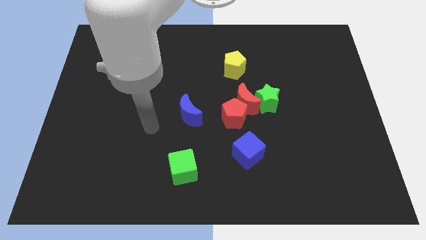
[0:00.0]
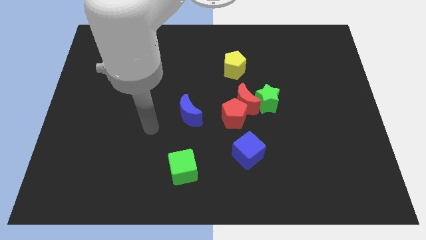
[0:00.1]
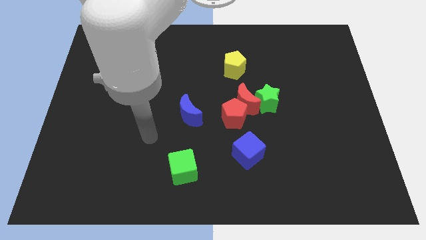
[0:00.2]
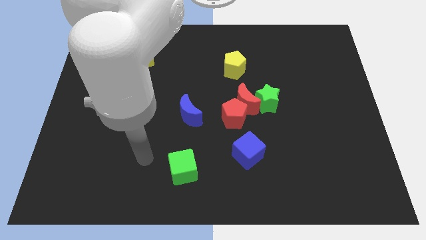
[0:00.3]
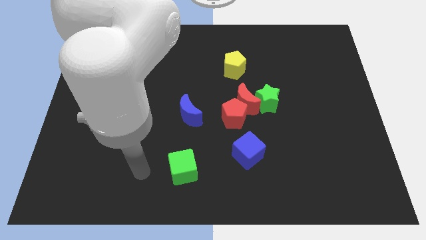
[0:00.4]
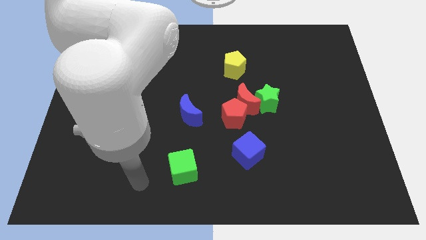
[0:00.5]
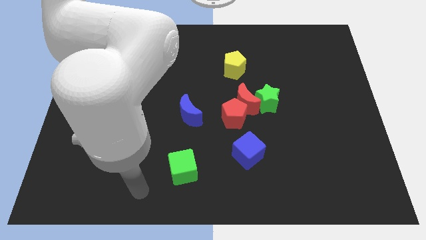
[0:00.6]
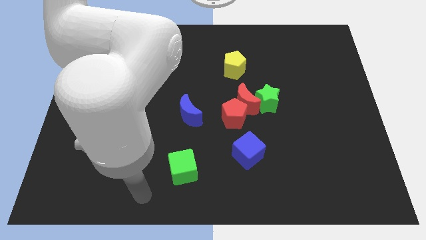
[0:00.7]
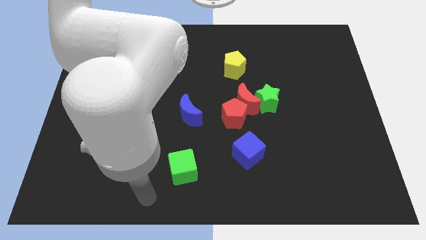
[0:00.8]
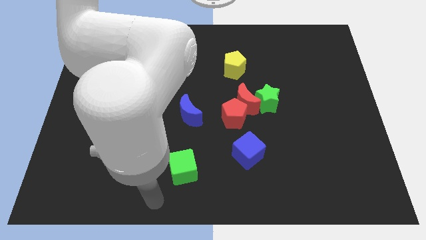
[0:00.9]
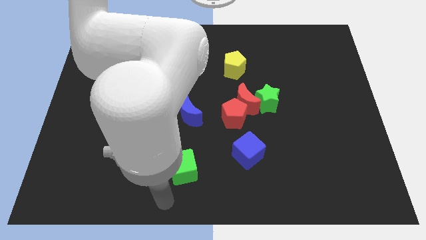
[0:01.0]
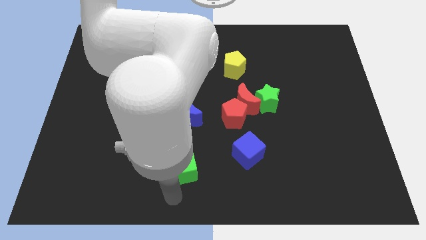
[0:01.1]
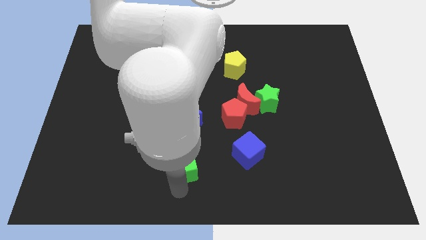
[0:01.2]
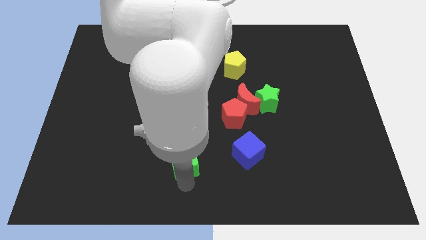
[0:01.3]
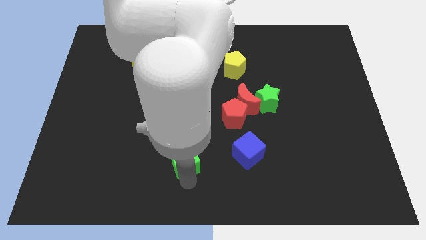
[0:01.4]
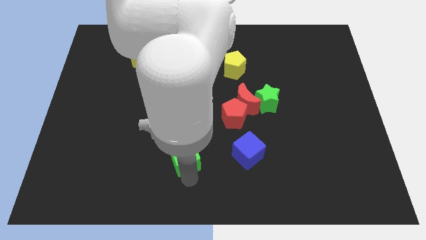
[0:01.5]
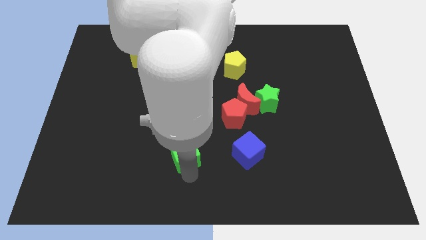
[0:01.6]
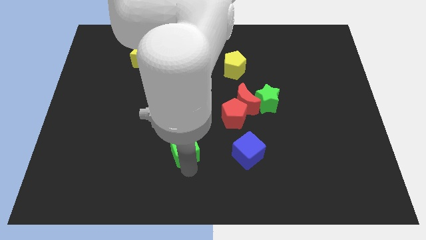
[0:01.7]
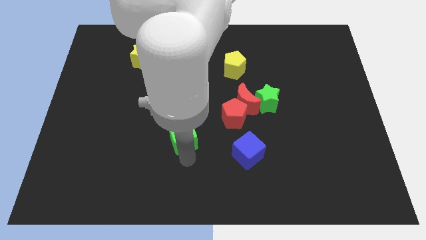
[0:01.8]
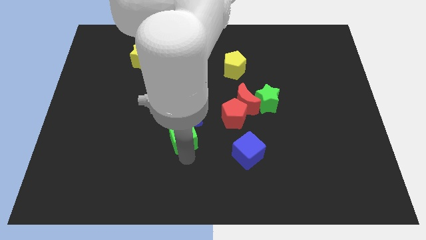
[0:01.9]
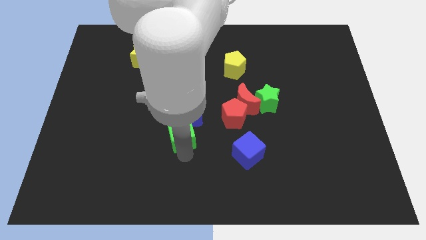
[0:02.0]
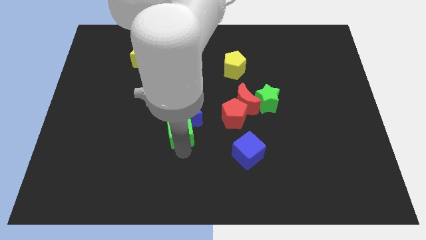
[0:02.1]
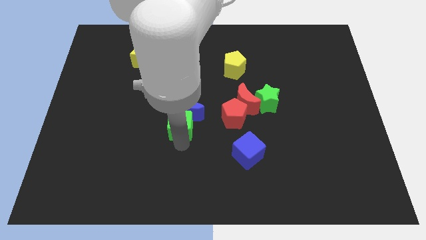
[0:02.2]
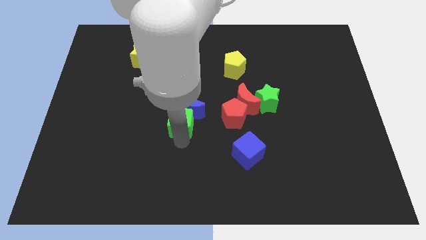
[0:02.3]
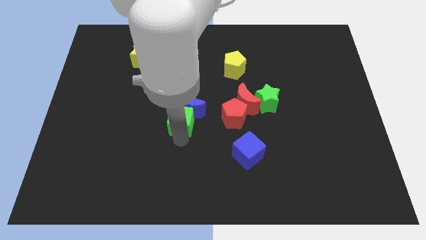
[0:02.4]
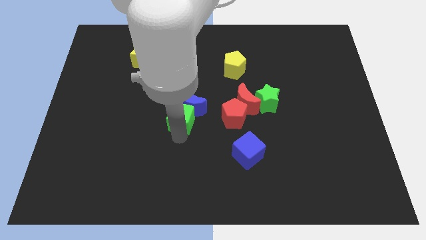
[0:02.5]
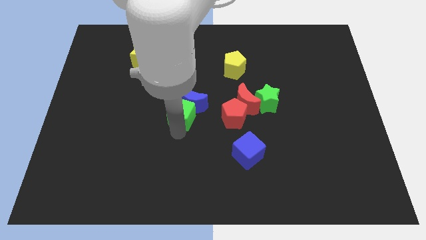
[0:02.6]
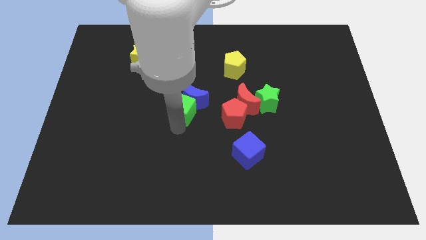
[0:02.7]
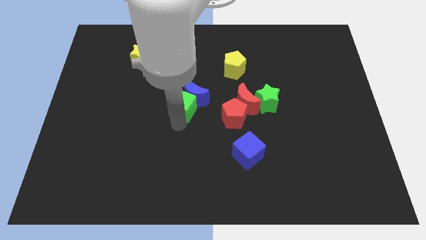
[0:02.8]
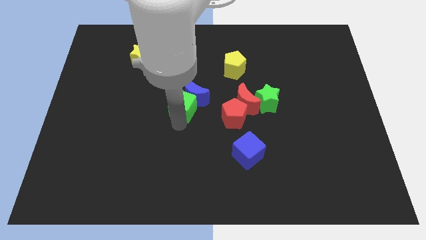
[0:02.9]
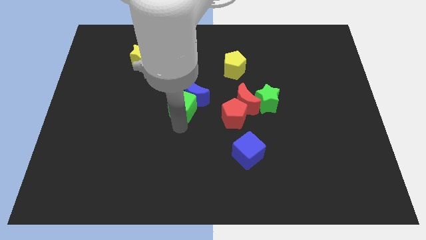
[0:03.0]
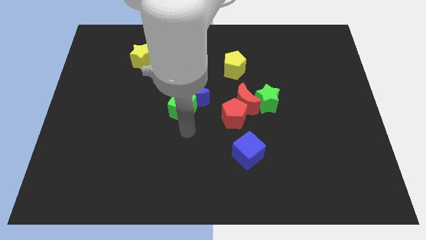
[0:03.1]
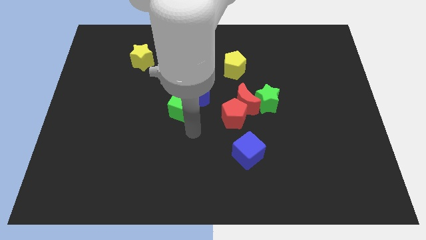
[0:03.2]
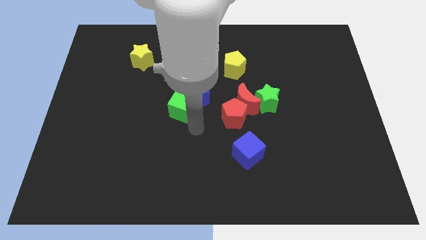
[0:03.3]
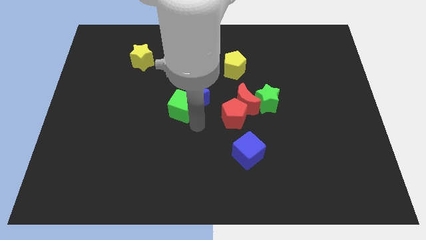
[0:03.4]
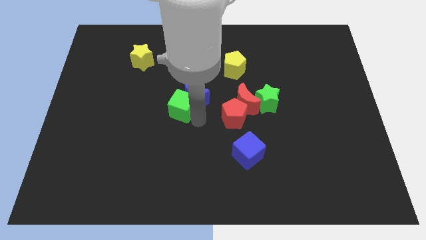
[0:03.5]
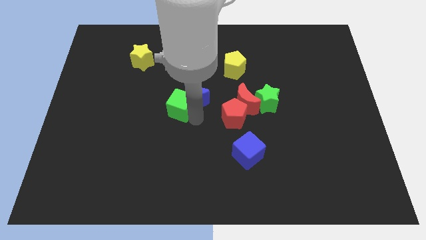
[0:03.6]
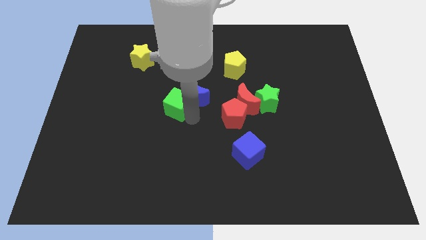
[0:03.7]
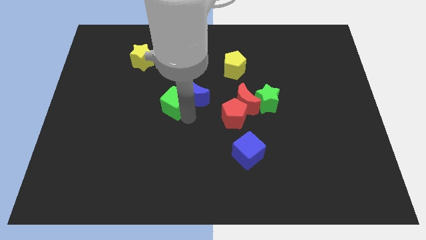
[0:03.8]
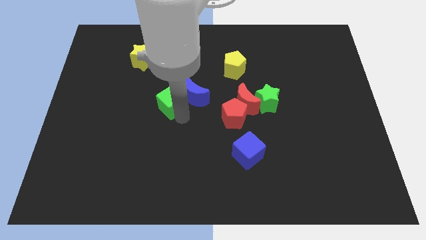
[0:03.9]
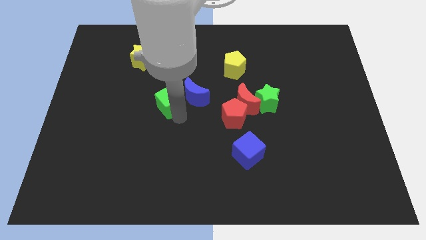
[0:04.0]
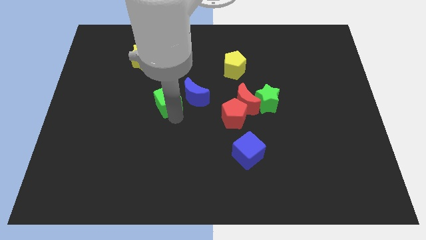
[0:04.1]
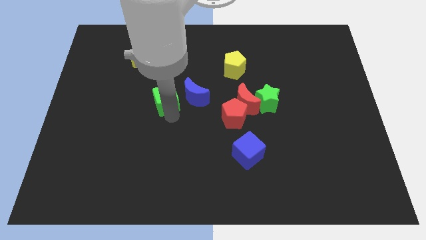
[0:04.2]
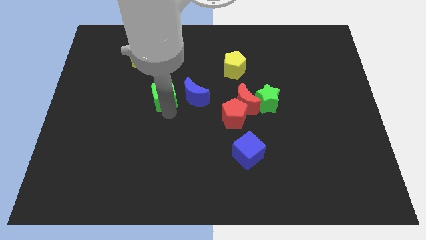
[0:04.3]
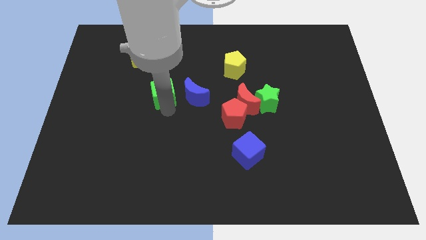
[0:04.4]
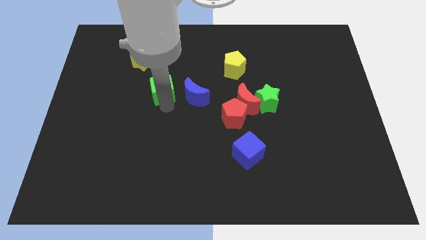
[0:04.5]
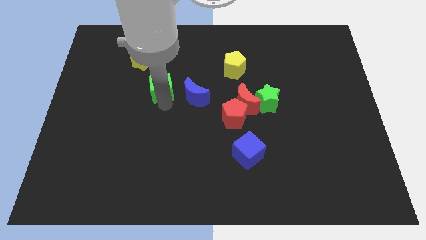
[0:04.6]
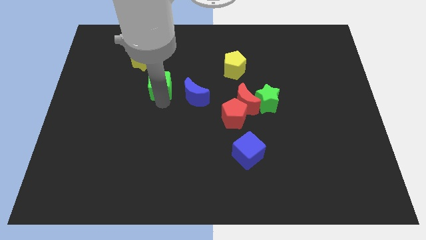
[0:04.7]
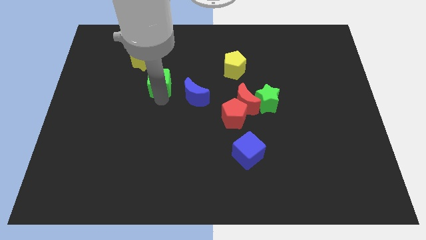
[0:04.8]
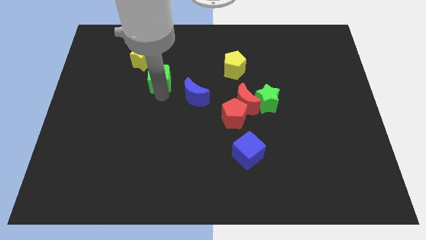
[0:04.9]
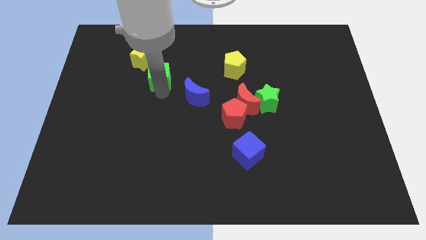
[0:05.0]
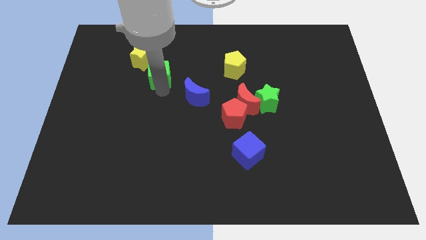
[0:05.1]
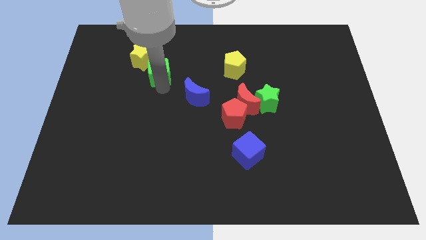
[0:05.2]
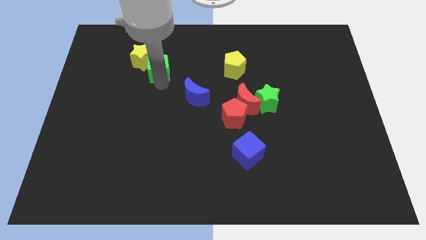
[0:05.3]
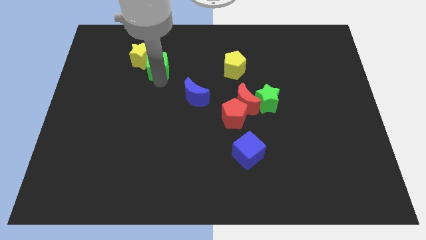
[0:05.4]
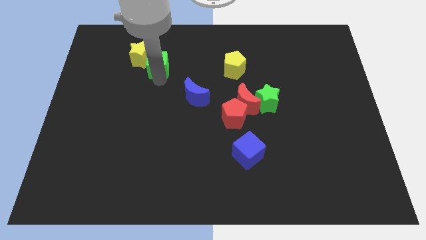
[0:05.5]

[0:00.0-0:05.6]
move the green cube towards the yellow star

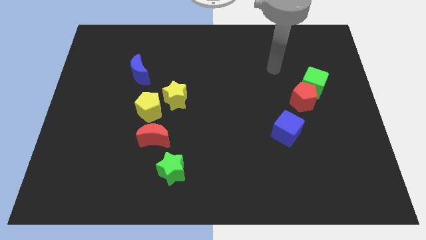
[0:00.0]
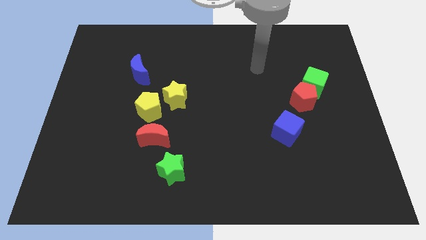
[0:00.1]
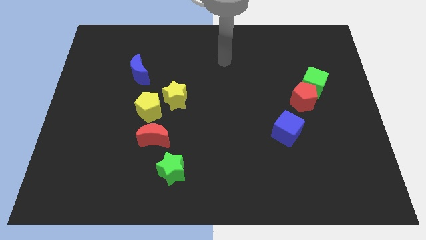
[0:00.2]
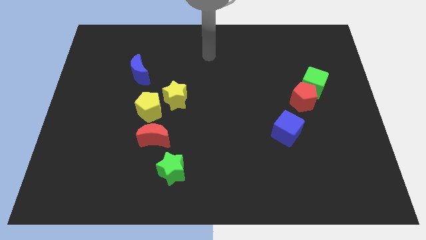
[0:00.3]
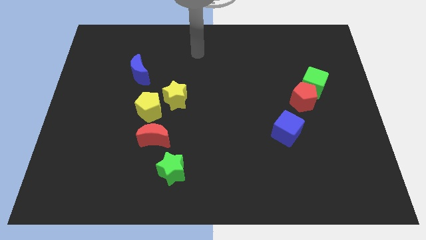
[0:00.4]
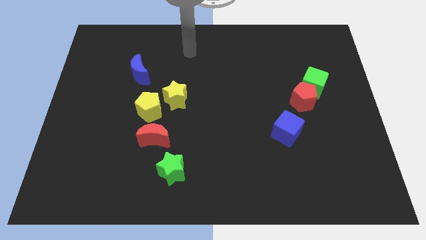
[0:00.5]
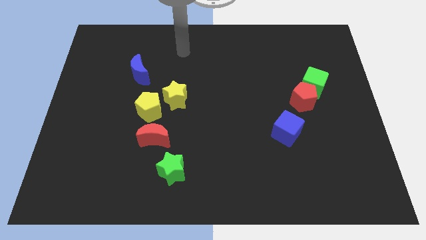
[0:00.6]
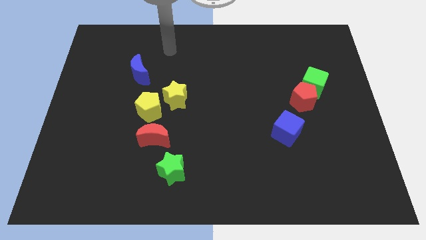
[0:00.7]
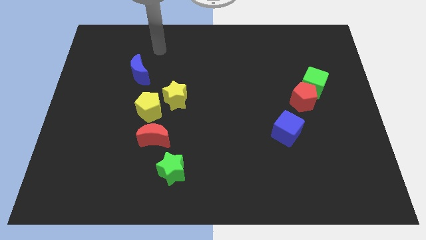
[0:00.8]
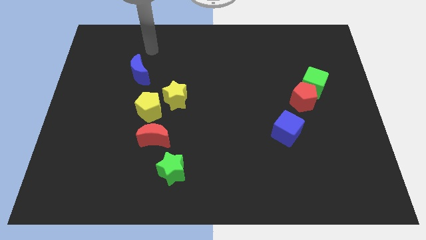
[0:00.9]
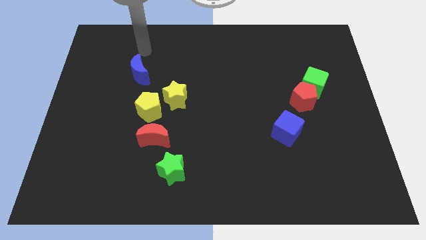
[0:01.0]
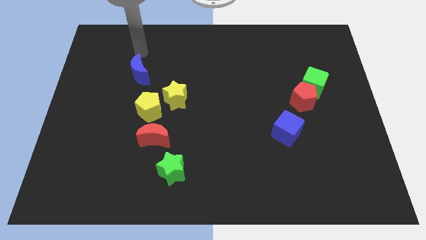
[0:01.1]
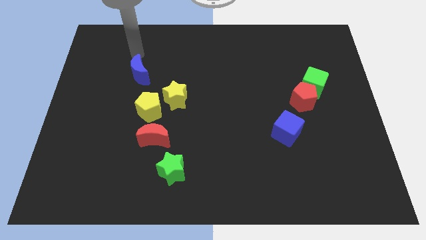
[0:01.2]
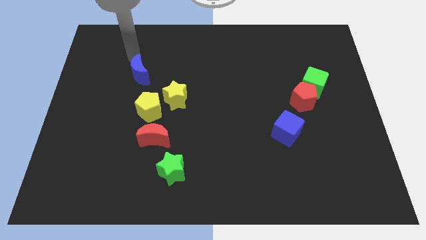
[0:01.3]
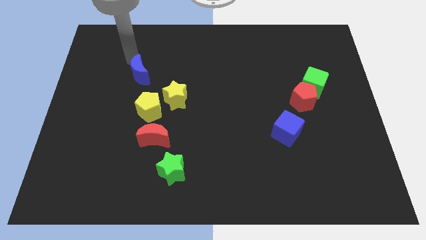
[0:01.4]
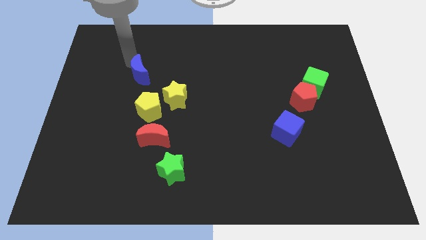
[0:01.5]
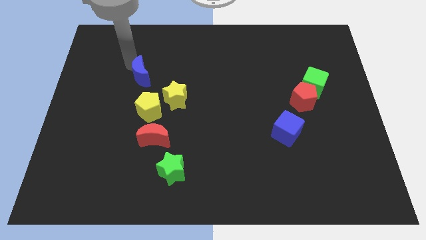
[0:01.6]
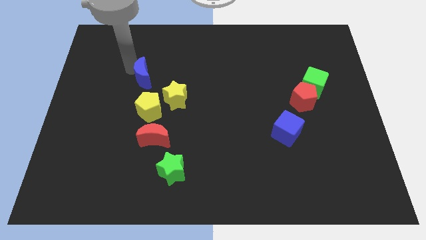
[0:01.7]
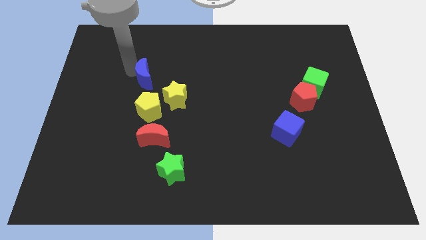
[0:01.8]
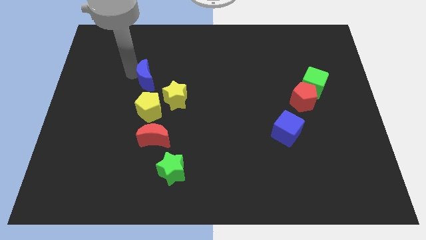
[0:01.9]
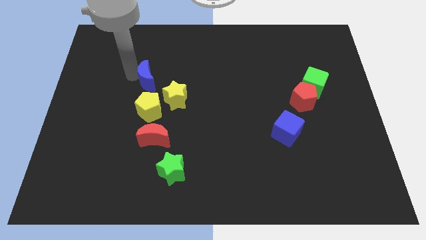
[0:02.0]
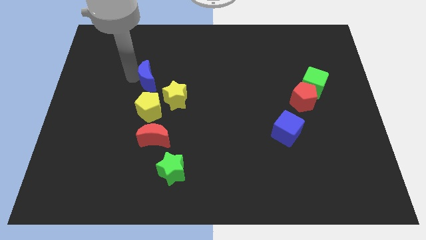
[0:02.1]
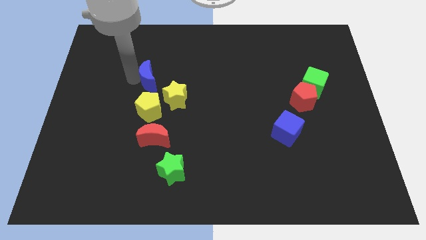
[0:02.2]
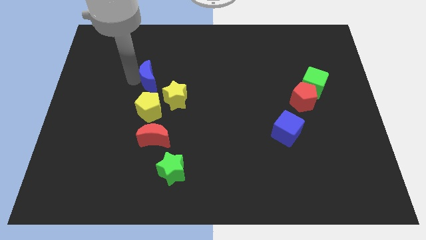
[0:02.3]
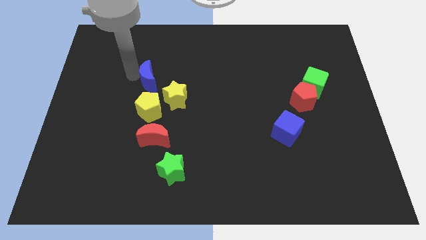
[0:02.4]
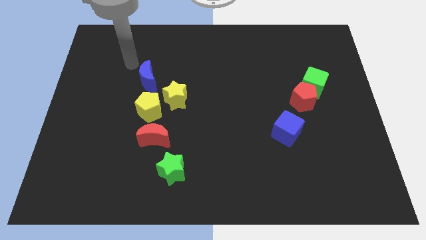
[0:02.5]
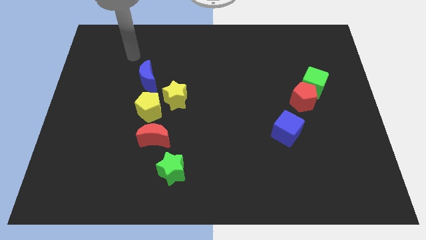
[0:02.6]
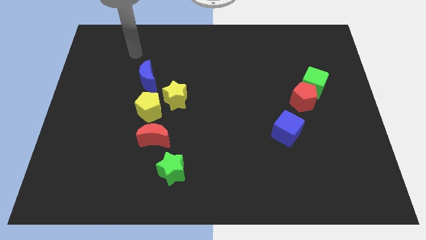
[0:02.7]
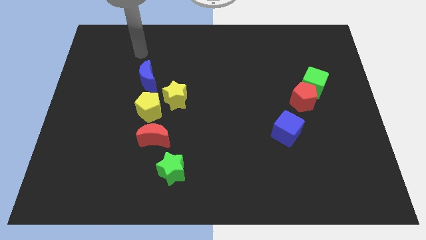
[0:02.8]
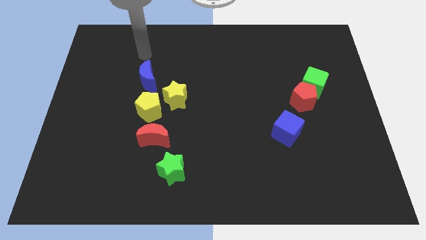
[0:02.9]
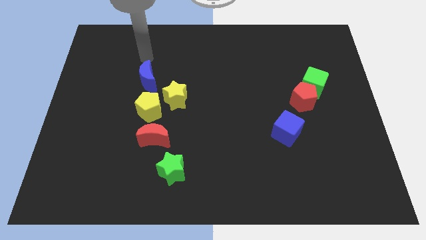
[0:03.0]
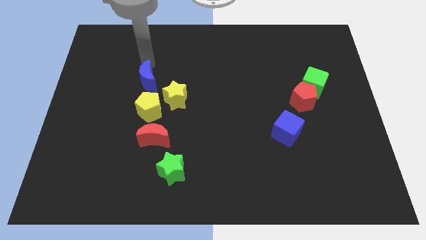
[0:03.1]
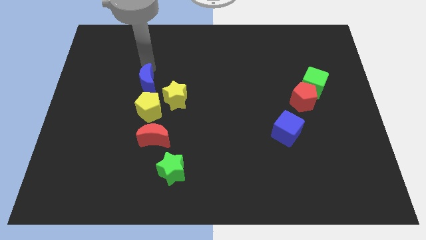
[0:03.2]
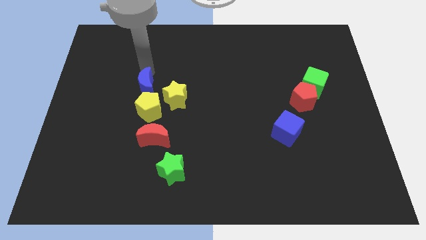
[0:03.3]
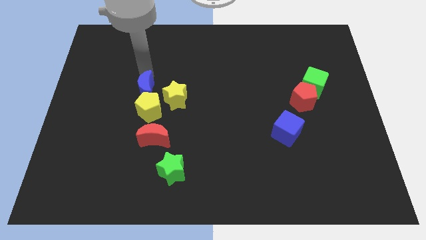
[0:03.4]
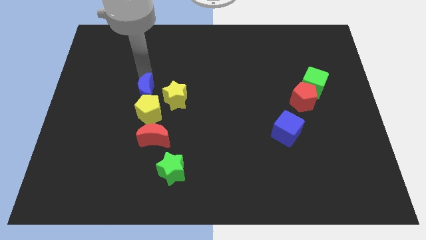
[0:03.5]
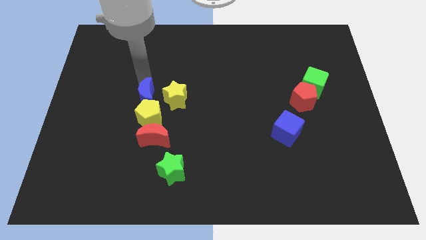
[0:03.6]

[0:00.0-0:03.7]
move the blue moon to the yellow pentagon
